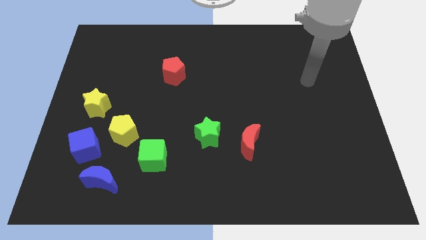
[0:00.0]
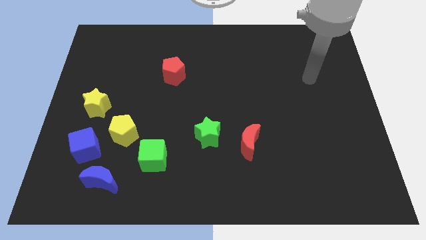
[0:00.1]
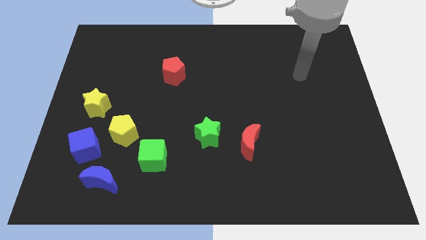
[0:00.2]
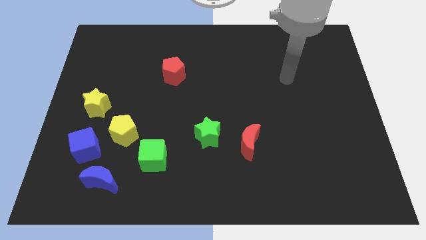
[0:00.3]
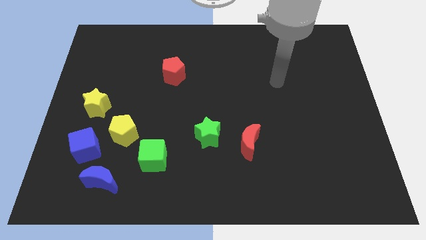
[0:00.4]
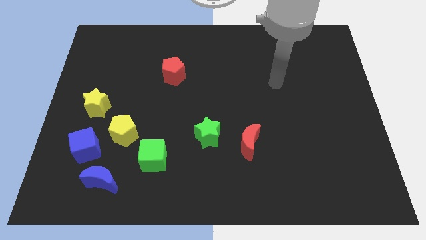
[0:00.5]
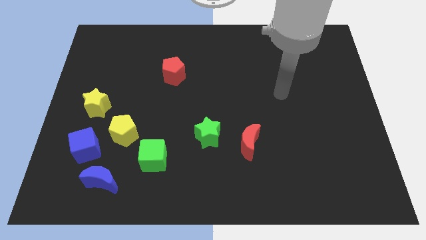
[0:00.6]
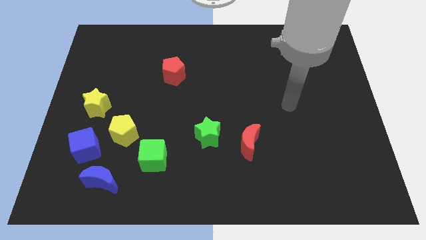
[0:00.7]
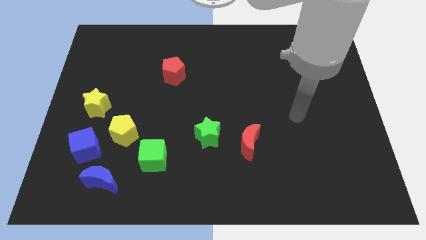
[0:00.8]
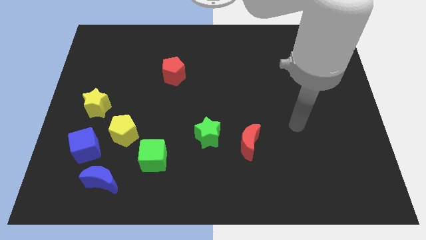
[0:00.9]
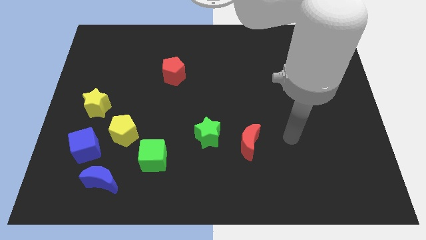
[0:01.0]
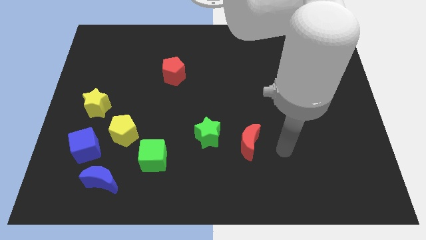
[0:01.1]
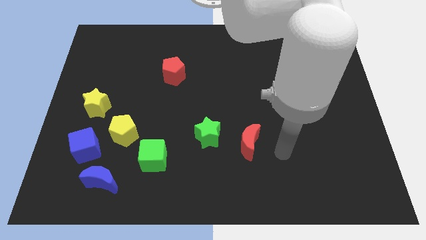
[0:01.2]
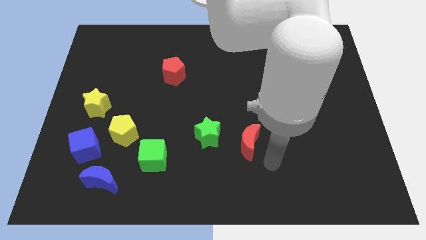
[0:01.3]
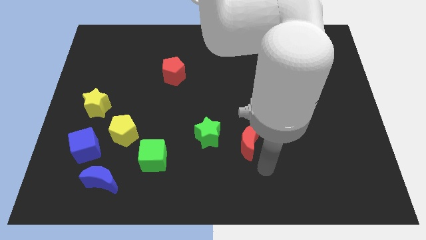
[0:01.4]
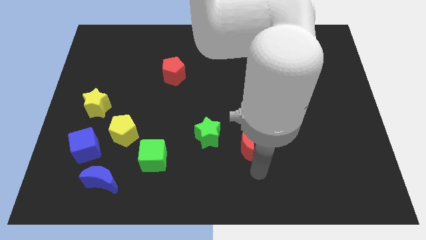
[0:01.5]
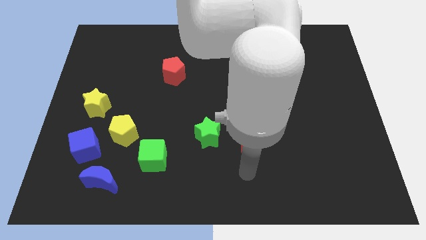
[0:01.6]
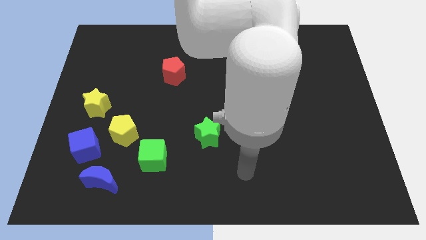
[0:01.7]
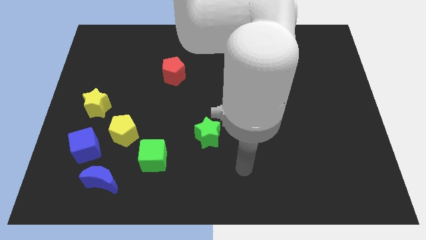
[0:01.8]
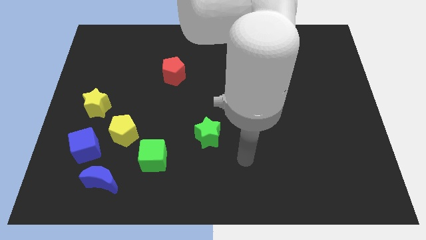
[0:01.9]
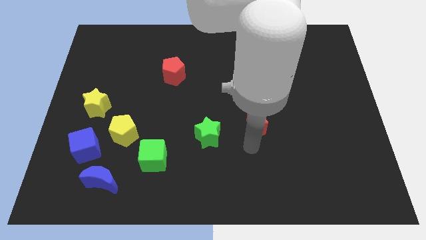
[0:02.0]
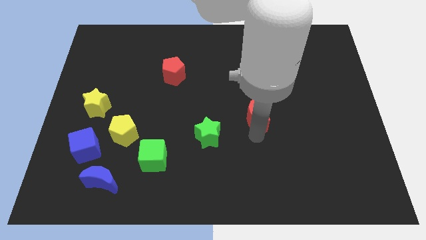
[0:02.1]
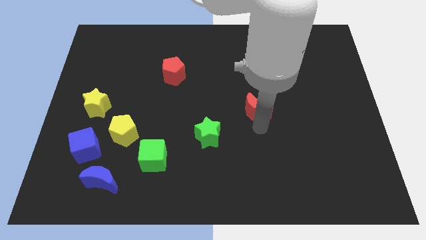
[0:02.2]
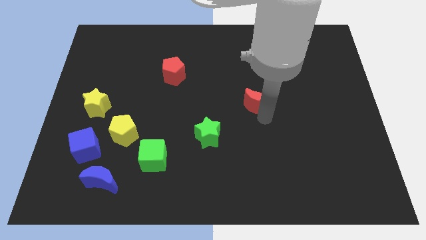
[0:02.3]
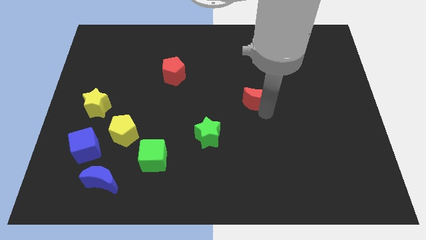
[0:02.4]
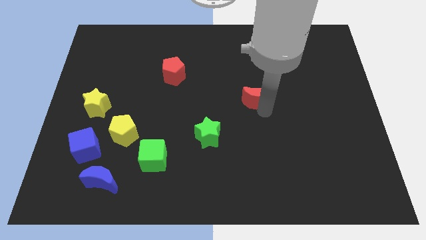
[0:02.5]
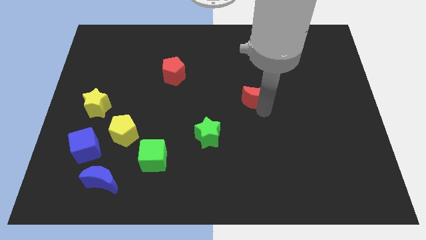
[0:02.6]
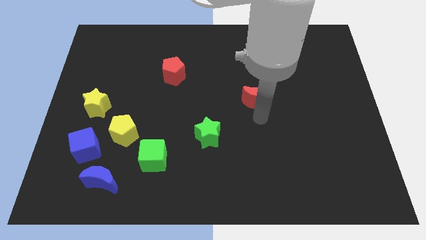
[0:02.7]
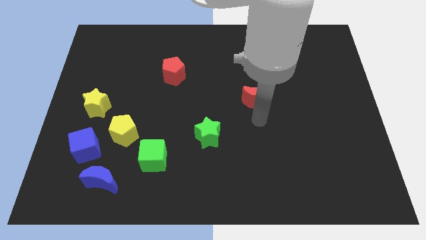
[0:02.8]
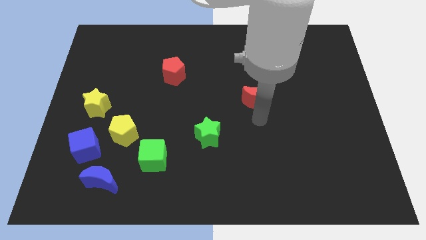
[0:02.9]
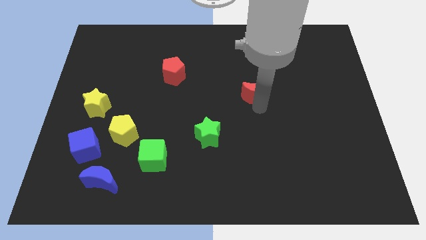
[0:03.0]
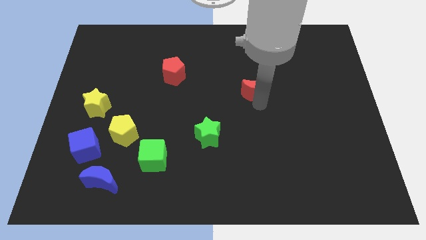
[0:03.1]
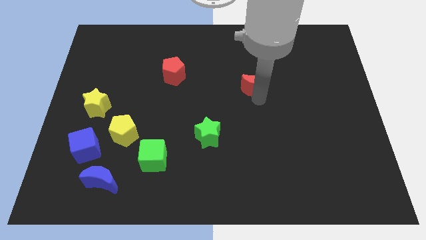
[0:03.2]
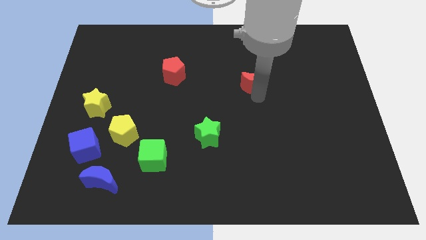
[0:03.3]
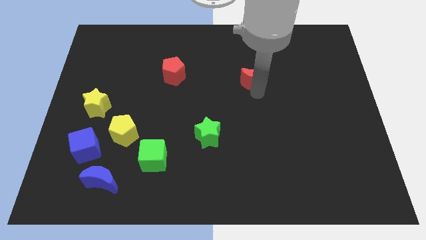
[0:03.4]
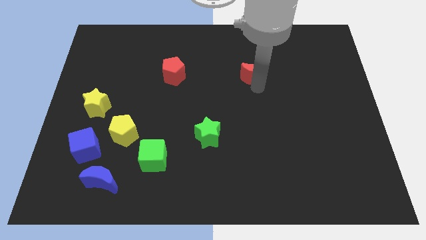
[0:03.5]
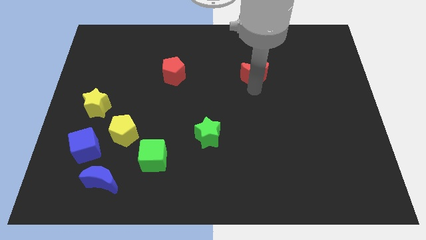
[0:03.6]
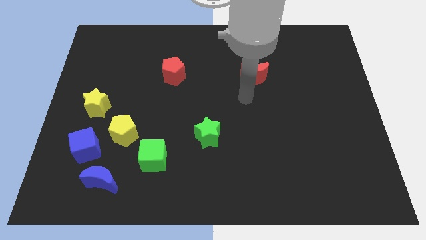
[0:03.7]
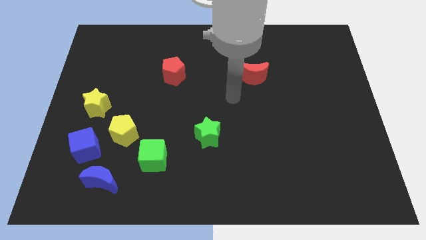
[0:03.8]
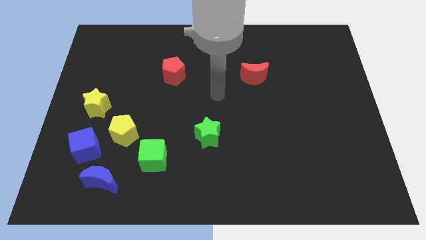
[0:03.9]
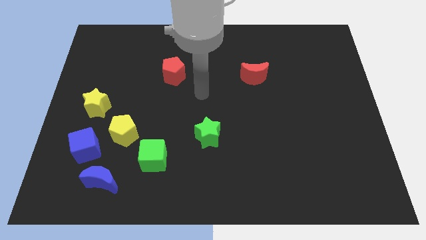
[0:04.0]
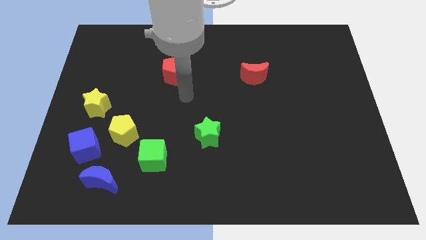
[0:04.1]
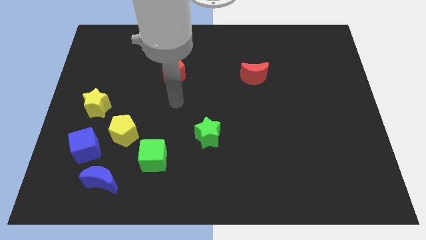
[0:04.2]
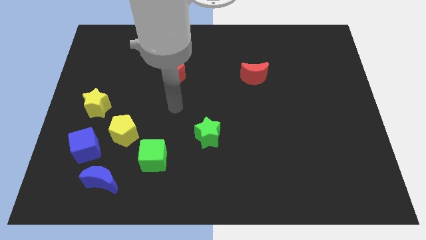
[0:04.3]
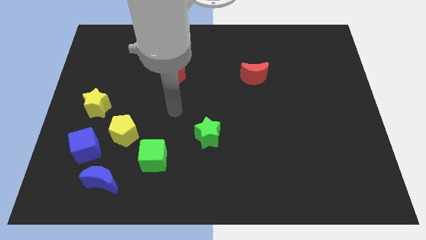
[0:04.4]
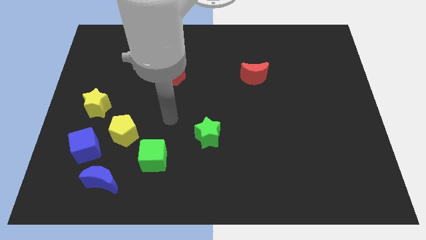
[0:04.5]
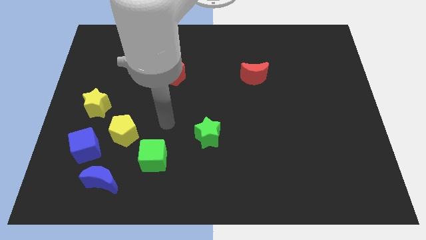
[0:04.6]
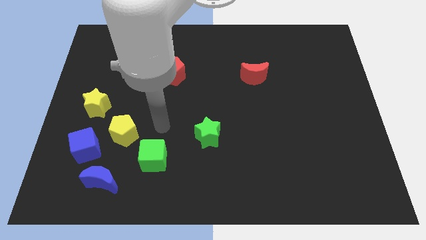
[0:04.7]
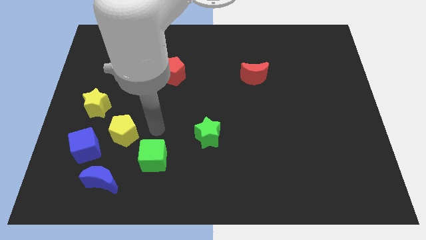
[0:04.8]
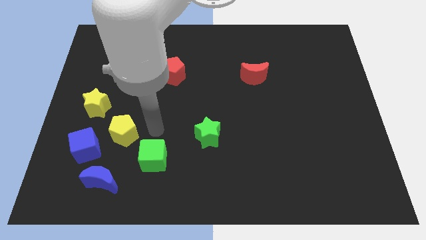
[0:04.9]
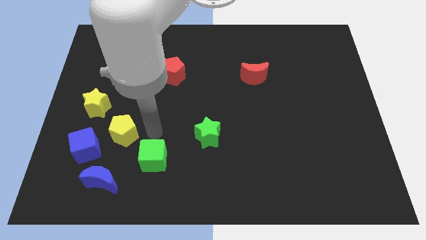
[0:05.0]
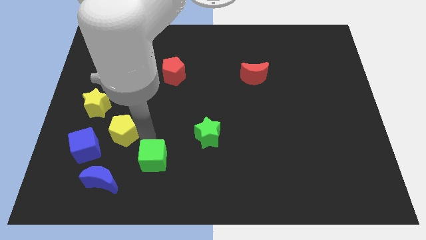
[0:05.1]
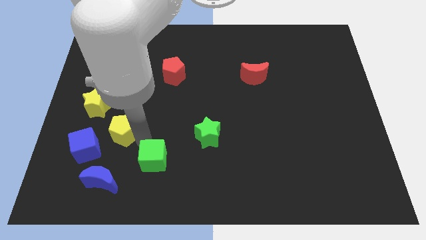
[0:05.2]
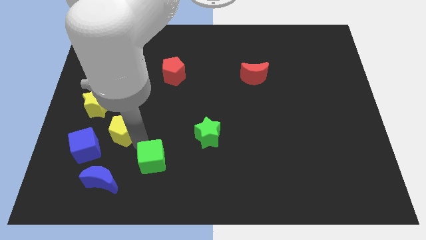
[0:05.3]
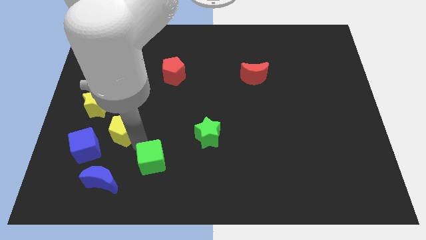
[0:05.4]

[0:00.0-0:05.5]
push the red moon towards top center

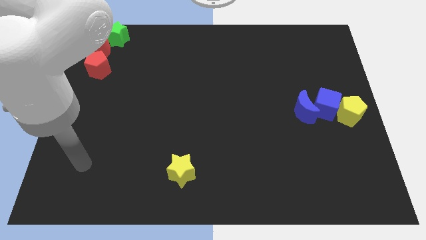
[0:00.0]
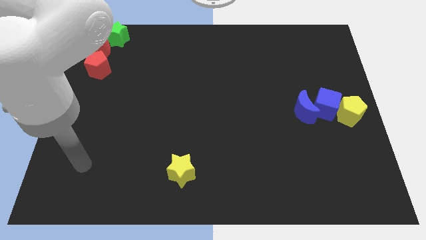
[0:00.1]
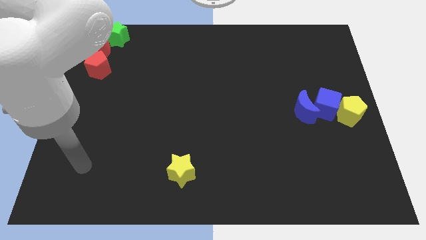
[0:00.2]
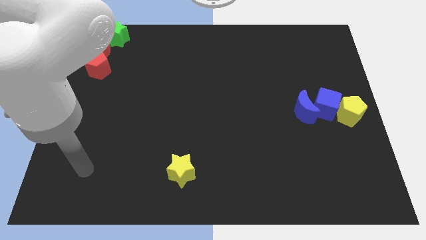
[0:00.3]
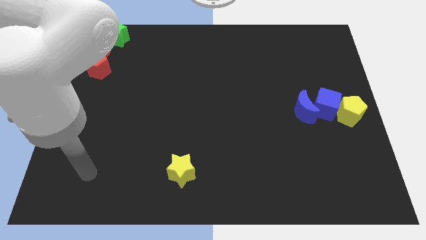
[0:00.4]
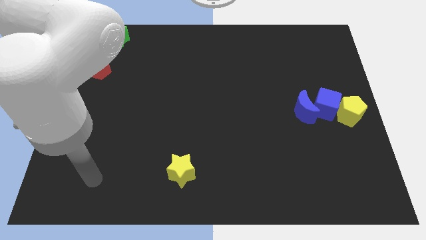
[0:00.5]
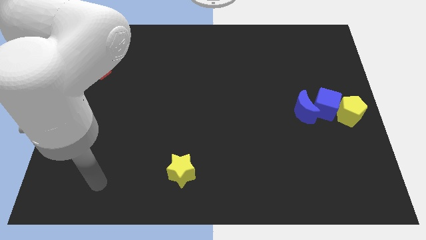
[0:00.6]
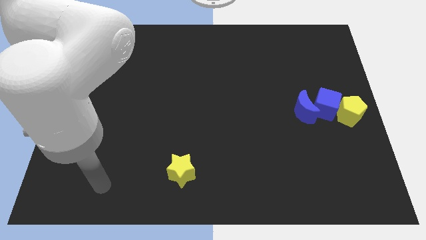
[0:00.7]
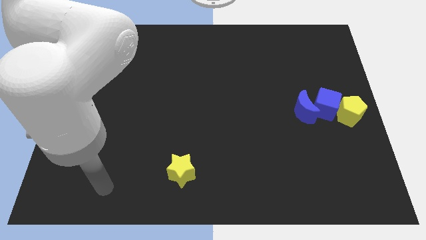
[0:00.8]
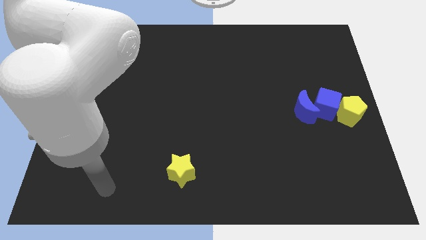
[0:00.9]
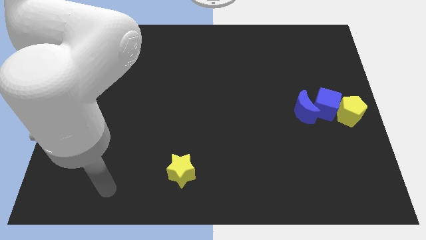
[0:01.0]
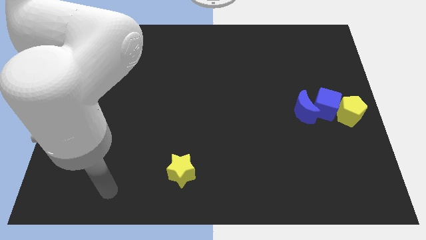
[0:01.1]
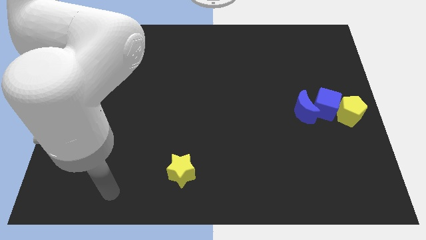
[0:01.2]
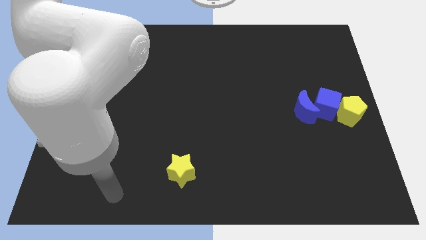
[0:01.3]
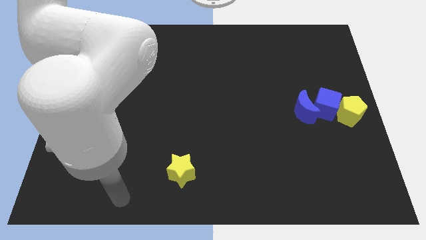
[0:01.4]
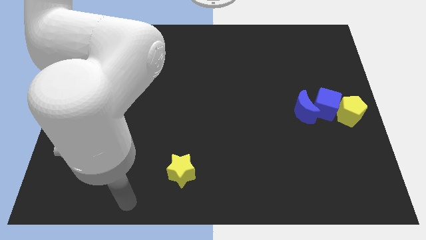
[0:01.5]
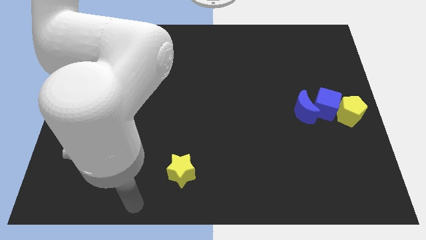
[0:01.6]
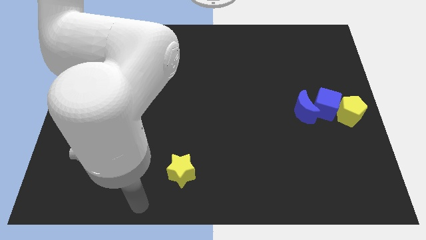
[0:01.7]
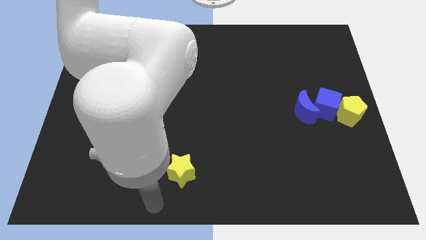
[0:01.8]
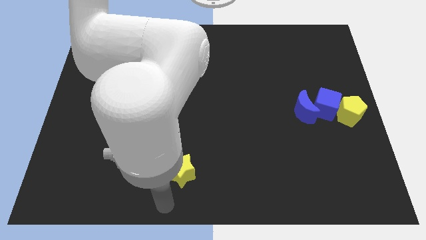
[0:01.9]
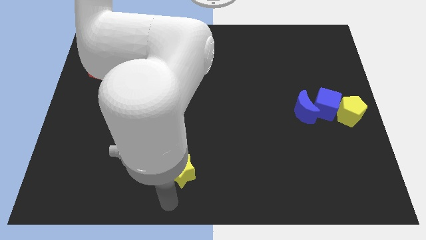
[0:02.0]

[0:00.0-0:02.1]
point the arm below the yellow star

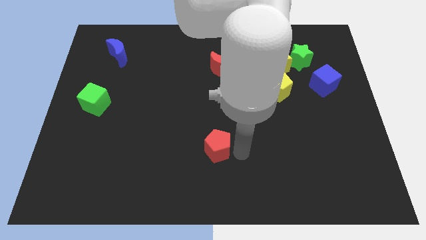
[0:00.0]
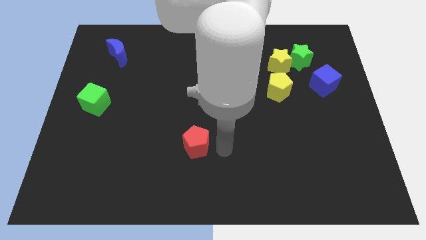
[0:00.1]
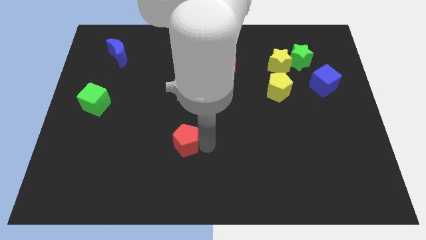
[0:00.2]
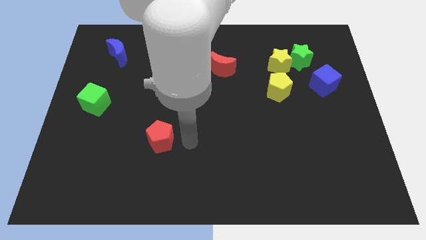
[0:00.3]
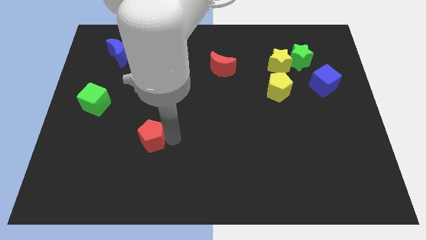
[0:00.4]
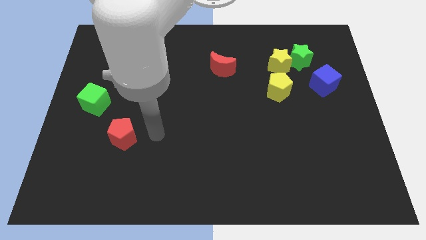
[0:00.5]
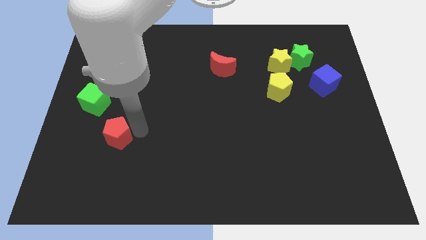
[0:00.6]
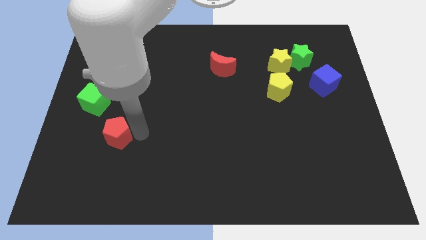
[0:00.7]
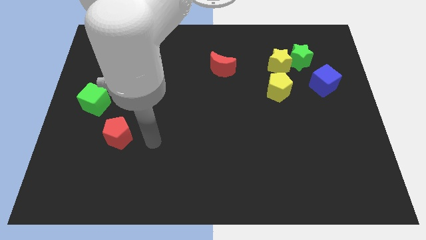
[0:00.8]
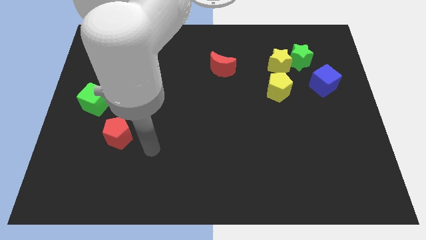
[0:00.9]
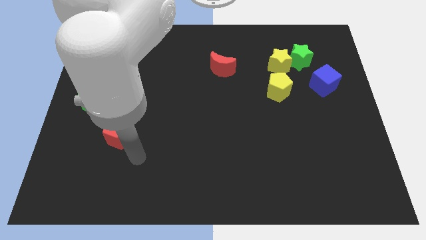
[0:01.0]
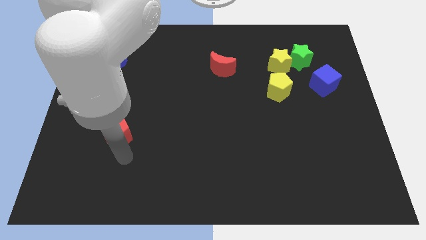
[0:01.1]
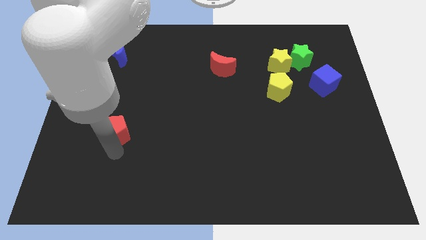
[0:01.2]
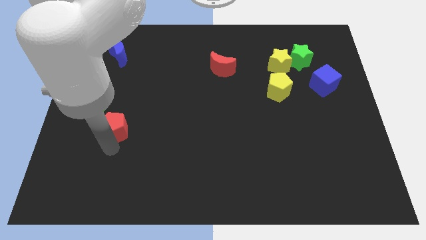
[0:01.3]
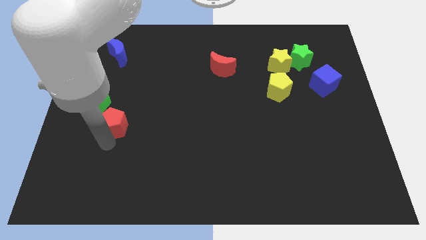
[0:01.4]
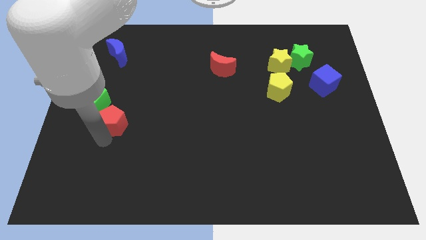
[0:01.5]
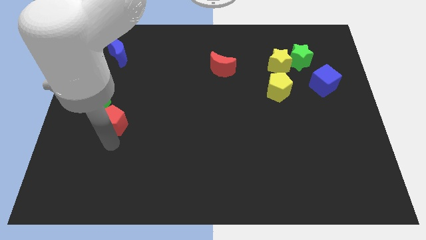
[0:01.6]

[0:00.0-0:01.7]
move the red pentagon towards the green cube
